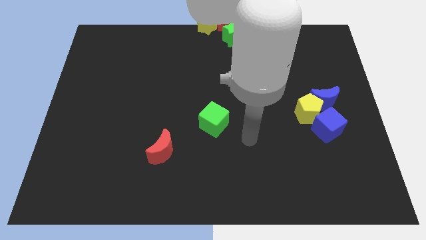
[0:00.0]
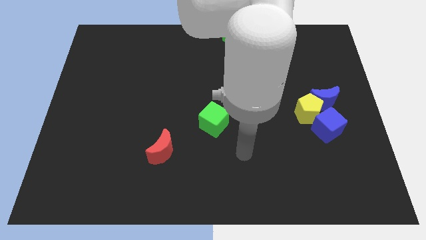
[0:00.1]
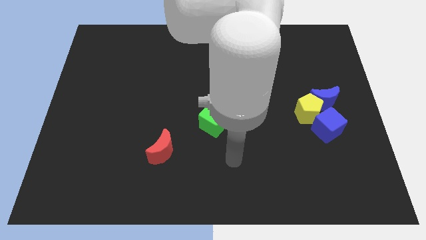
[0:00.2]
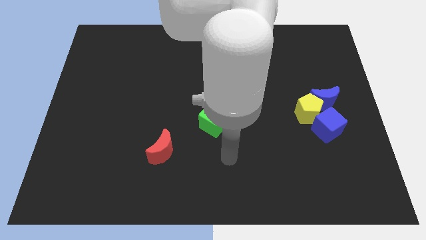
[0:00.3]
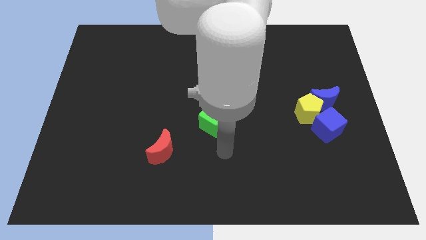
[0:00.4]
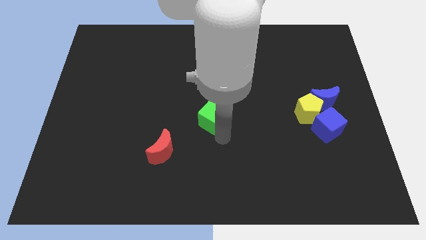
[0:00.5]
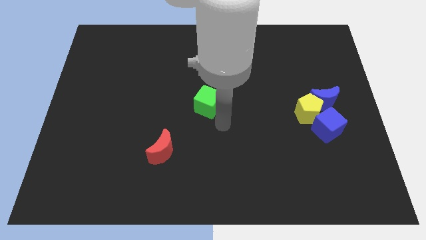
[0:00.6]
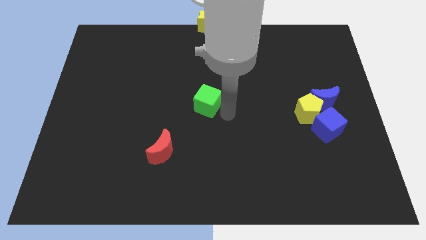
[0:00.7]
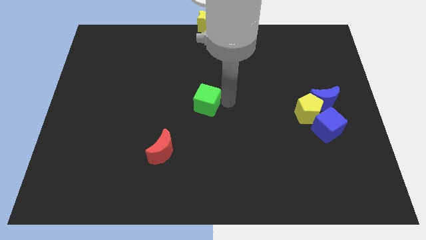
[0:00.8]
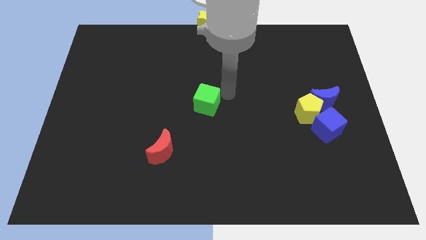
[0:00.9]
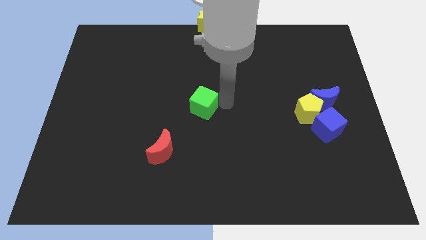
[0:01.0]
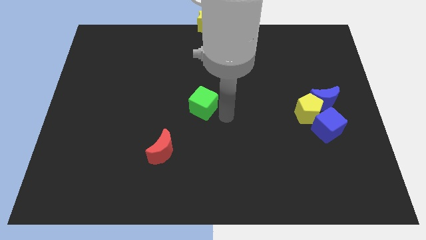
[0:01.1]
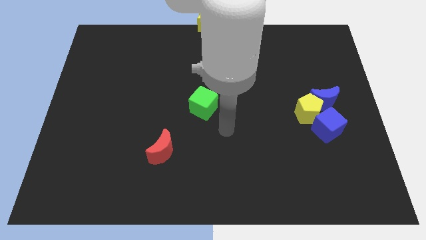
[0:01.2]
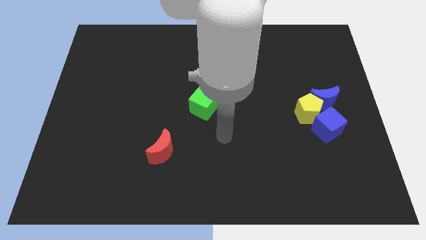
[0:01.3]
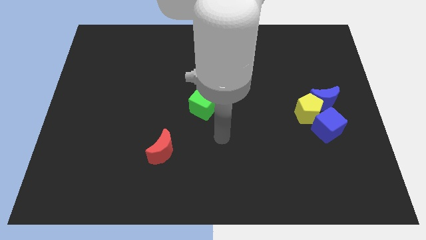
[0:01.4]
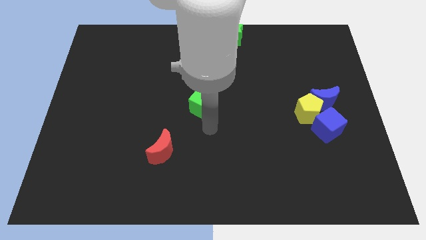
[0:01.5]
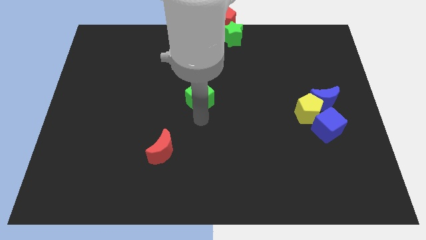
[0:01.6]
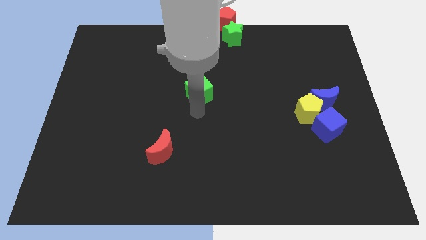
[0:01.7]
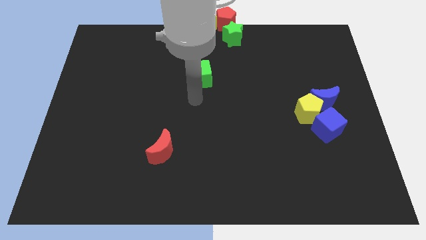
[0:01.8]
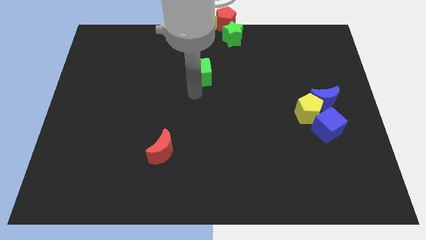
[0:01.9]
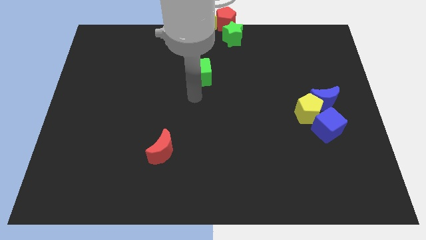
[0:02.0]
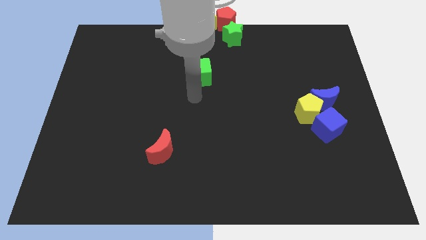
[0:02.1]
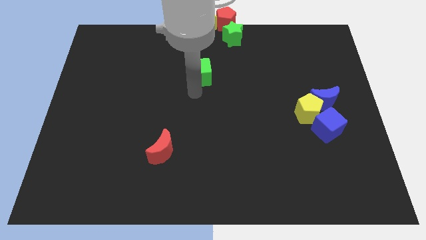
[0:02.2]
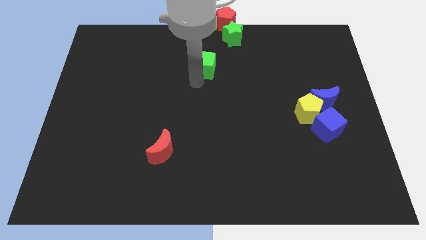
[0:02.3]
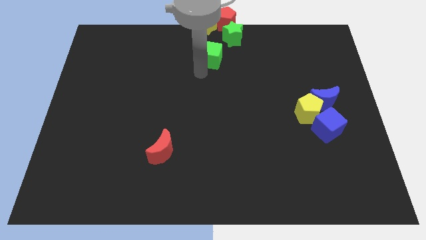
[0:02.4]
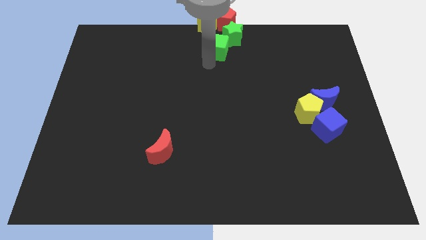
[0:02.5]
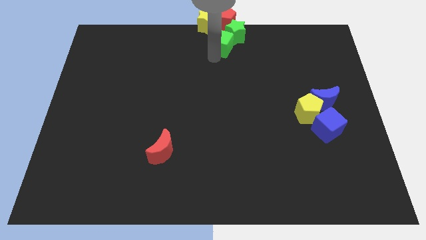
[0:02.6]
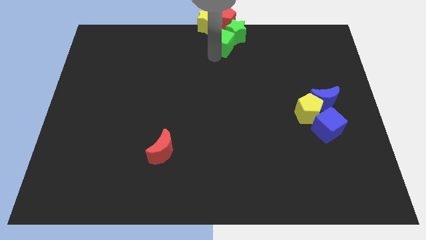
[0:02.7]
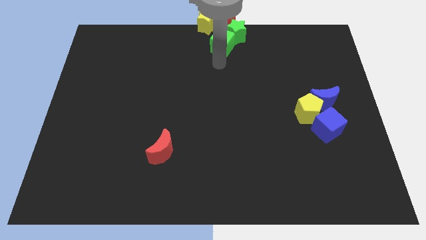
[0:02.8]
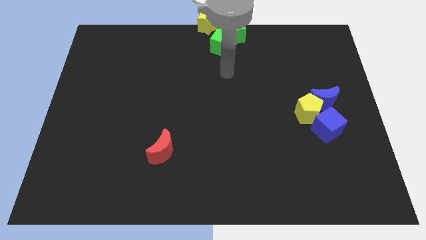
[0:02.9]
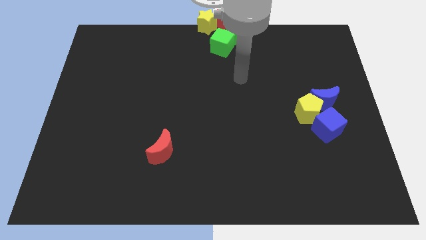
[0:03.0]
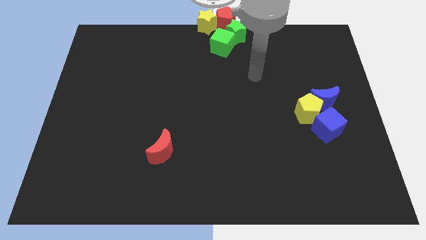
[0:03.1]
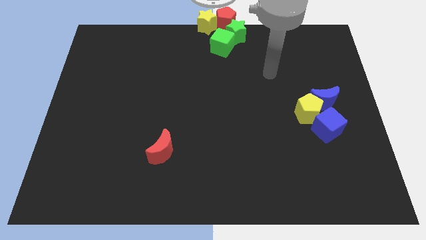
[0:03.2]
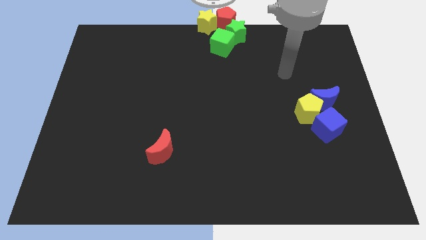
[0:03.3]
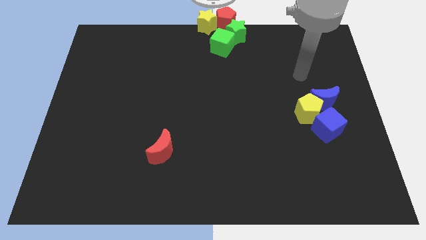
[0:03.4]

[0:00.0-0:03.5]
push the green cube towards the top center

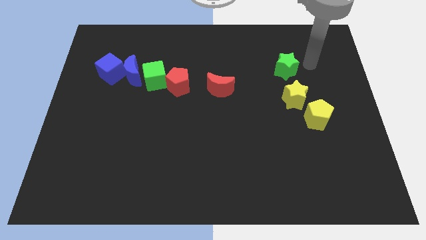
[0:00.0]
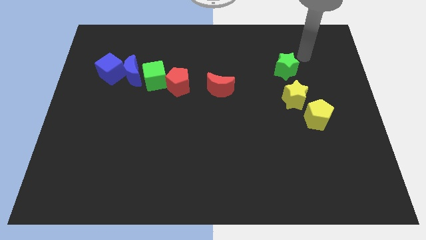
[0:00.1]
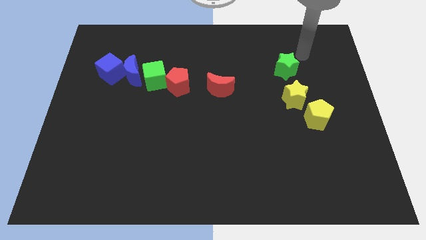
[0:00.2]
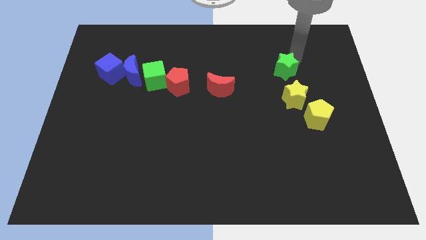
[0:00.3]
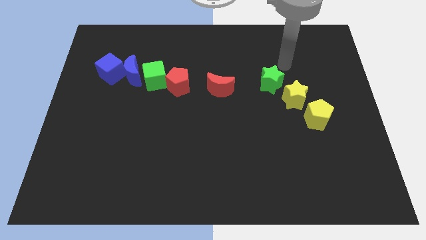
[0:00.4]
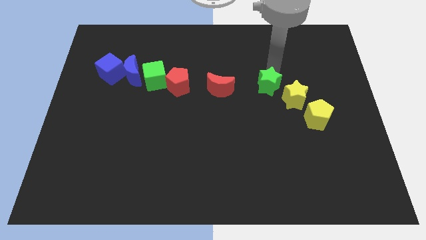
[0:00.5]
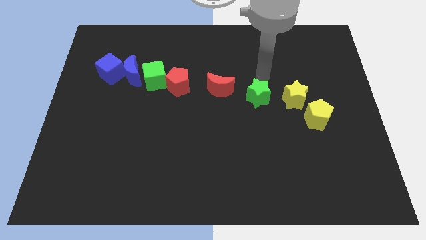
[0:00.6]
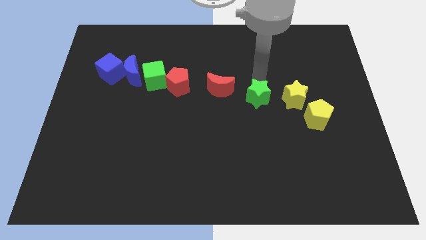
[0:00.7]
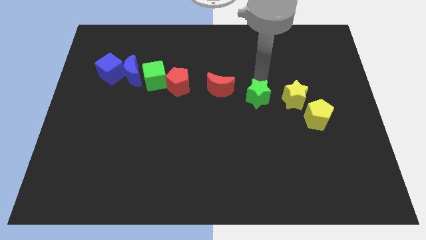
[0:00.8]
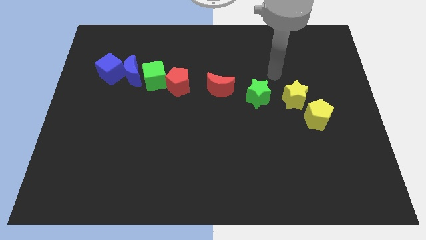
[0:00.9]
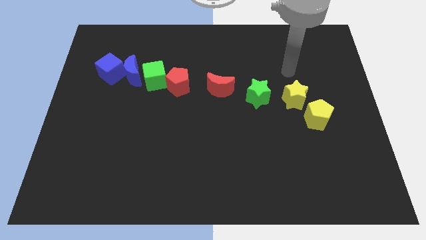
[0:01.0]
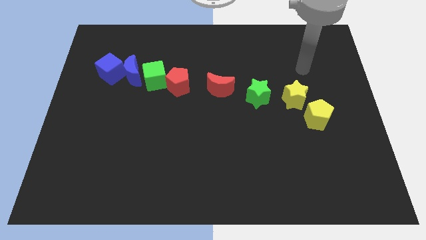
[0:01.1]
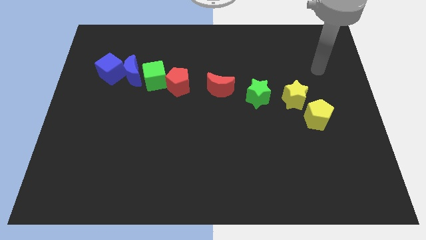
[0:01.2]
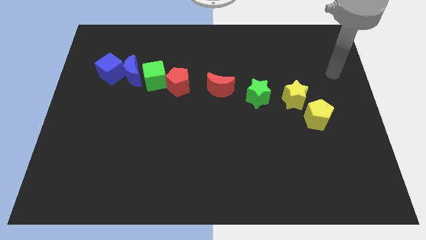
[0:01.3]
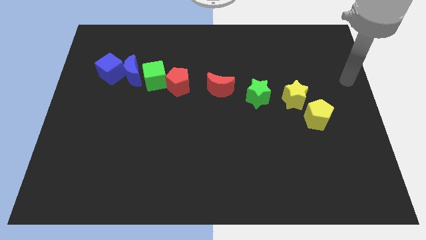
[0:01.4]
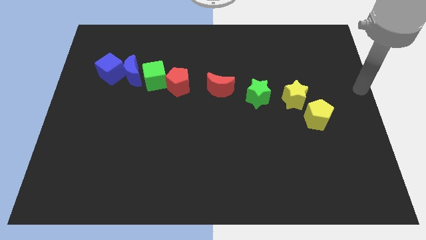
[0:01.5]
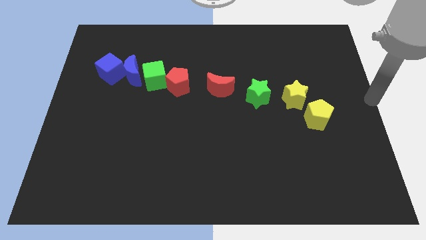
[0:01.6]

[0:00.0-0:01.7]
place the green star in between the yellow star and the red crescent to form a horizontal line

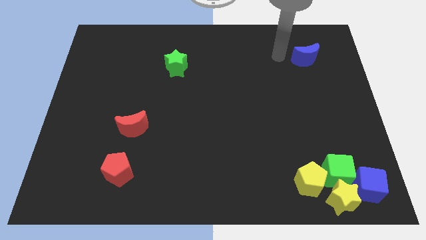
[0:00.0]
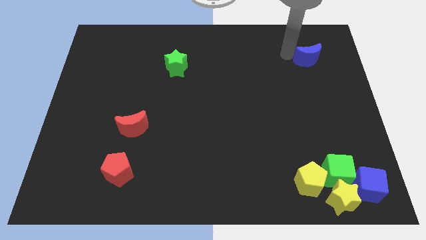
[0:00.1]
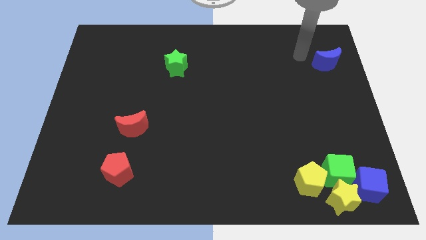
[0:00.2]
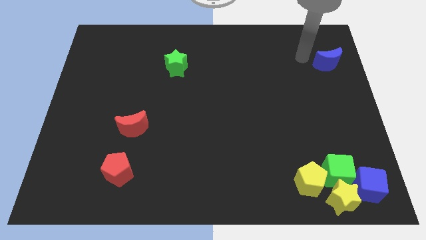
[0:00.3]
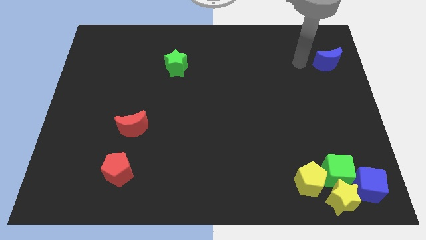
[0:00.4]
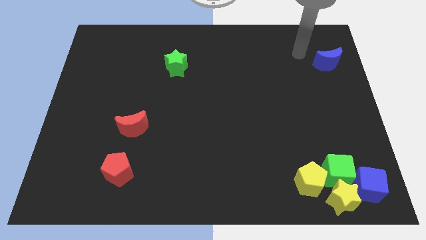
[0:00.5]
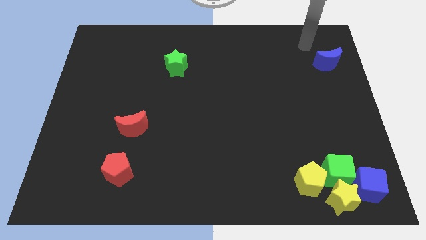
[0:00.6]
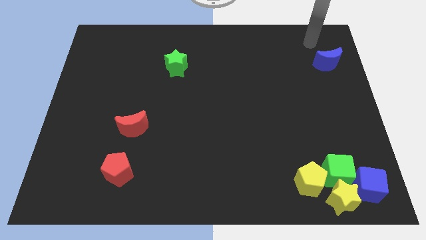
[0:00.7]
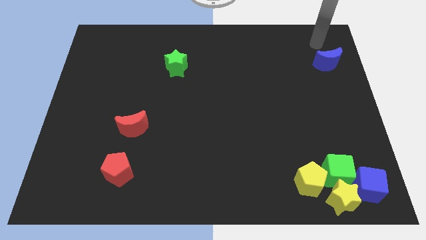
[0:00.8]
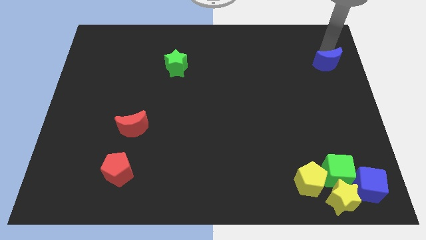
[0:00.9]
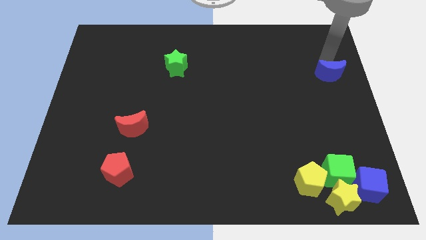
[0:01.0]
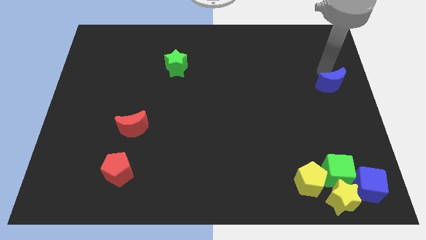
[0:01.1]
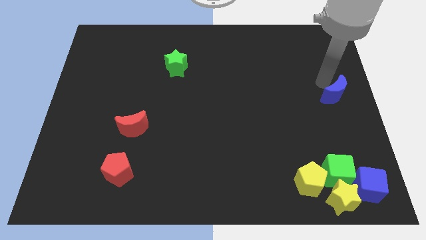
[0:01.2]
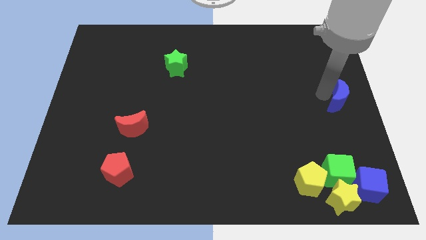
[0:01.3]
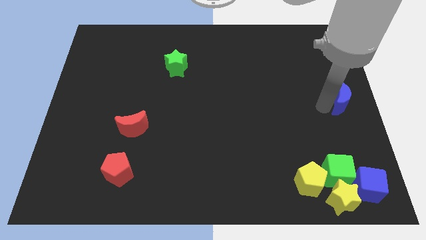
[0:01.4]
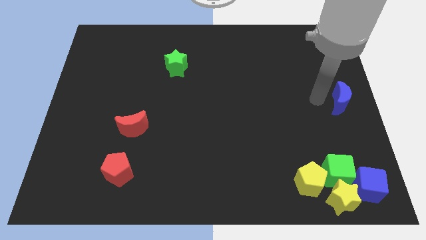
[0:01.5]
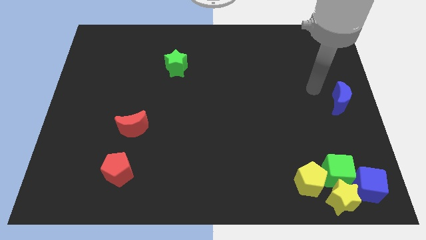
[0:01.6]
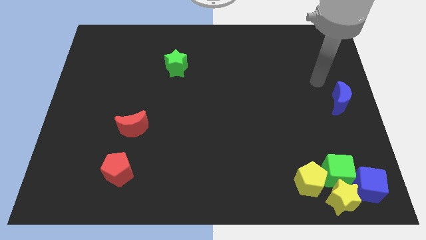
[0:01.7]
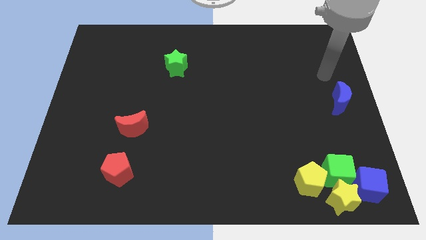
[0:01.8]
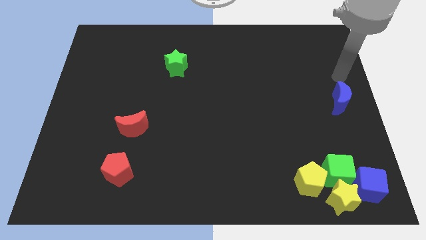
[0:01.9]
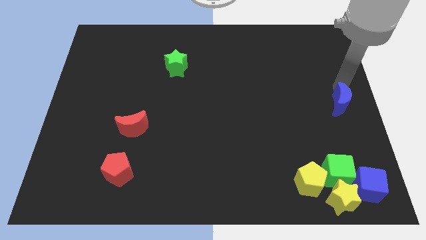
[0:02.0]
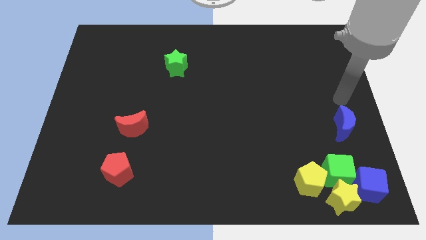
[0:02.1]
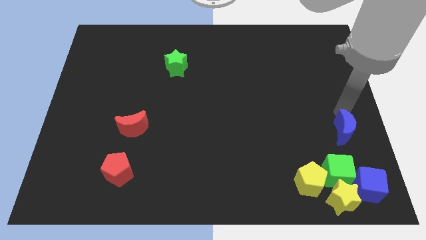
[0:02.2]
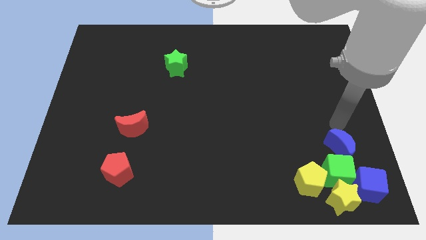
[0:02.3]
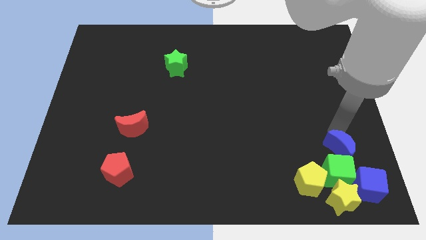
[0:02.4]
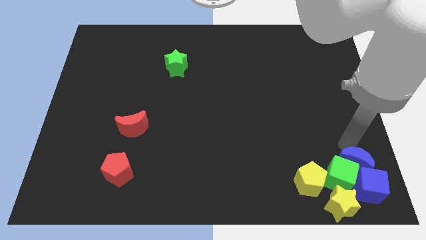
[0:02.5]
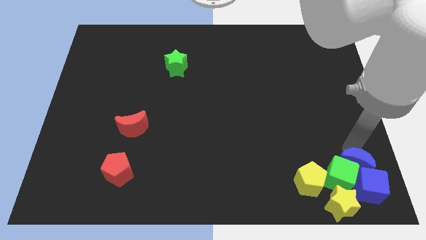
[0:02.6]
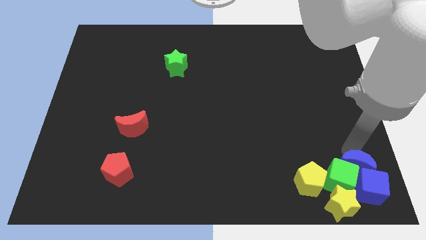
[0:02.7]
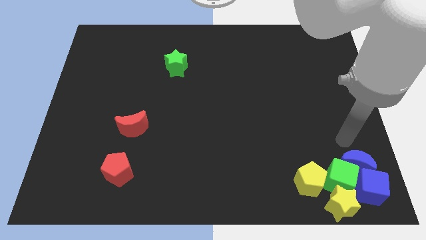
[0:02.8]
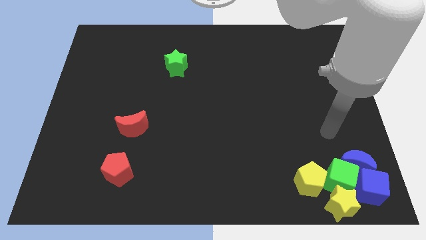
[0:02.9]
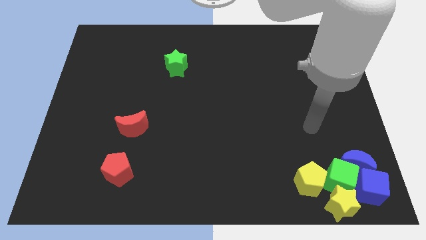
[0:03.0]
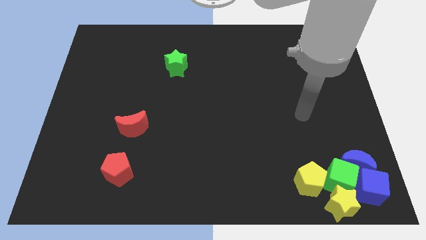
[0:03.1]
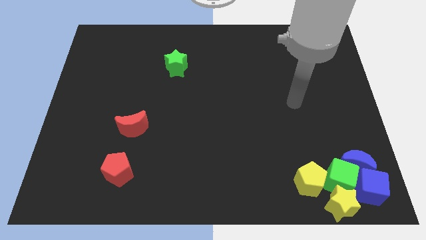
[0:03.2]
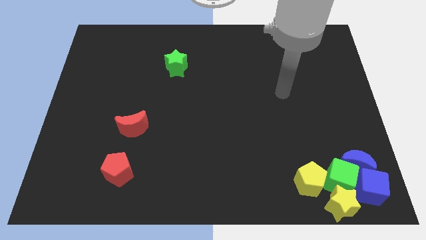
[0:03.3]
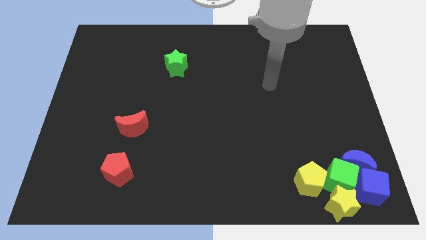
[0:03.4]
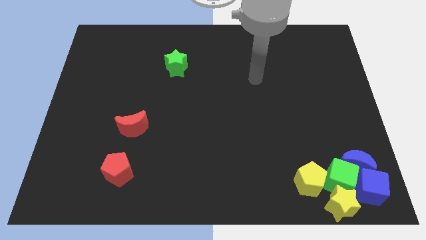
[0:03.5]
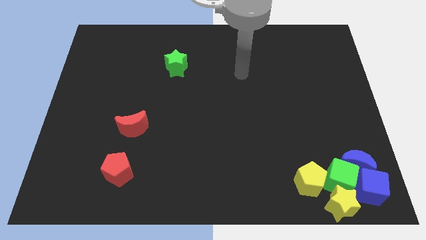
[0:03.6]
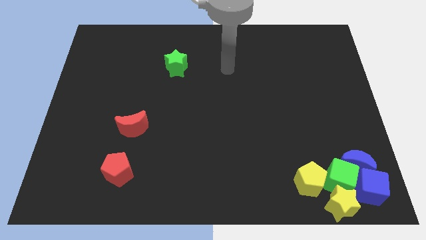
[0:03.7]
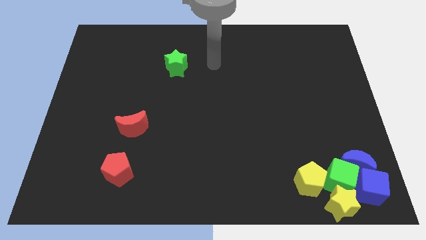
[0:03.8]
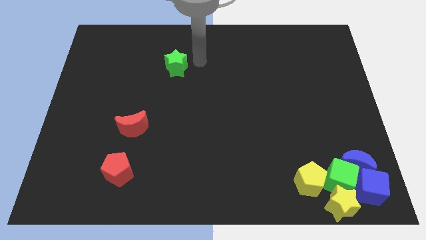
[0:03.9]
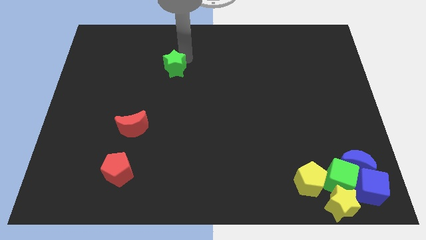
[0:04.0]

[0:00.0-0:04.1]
place blue moon to the top left of the blue cube
